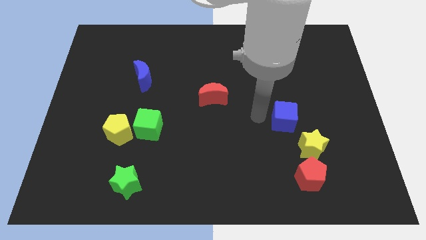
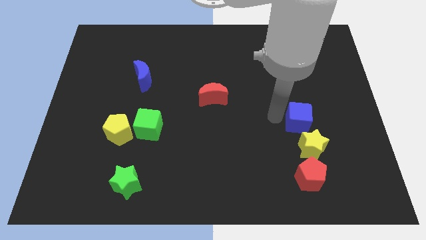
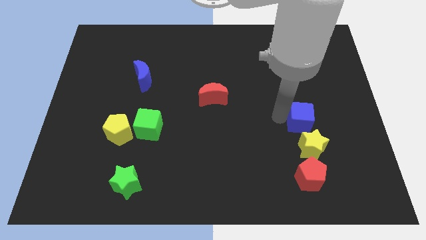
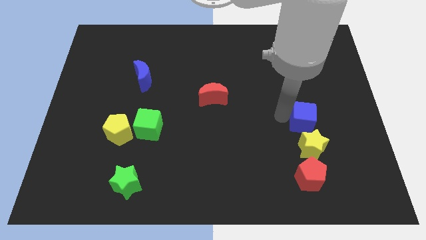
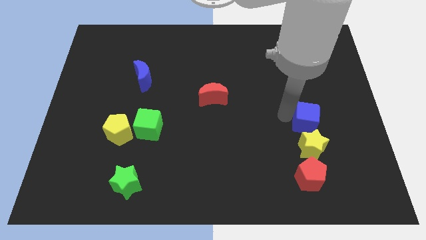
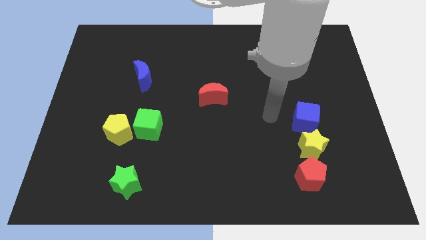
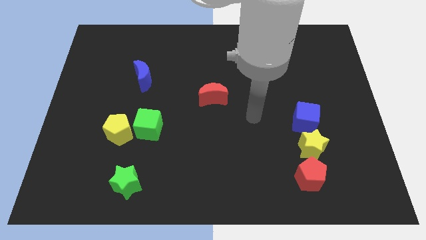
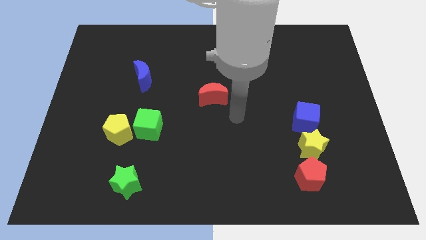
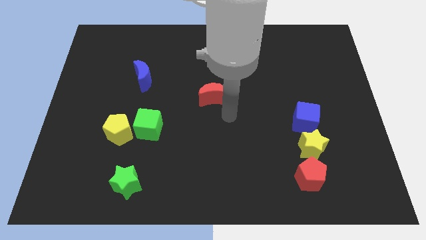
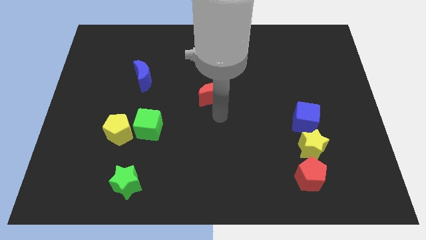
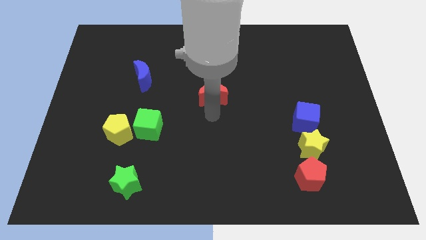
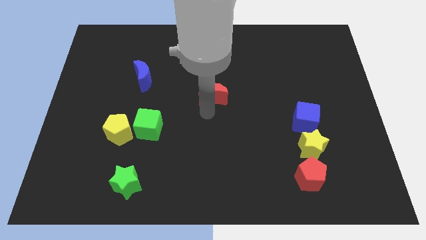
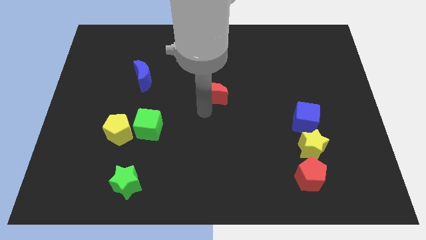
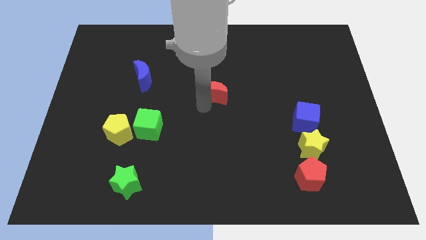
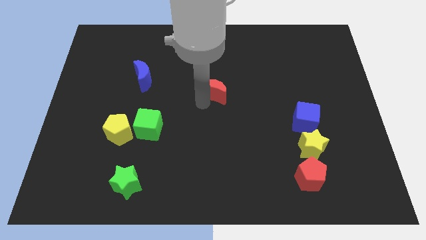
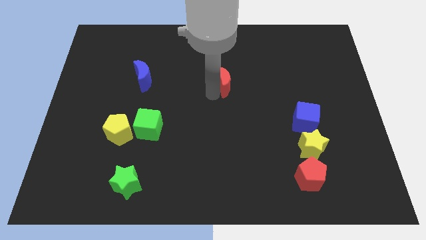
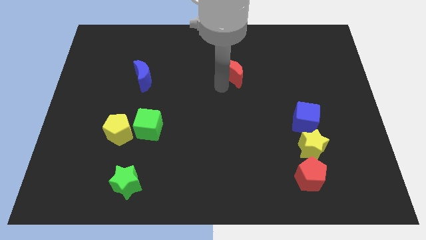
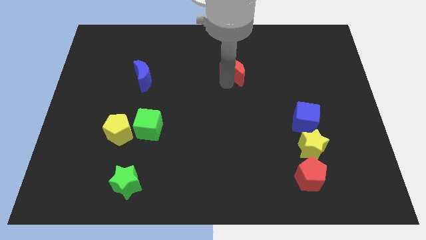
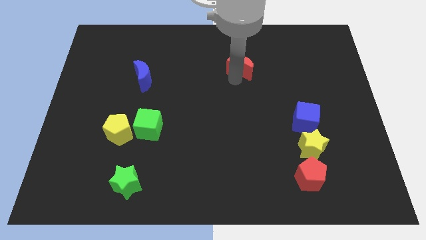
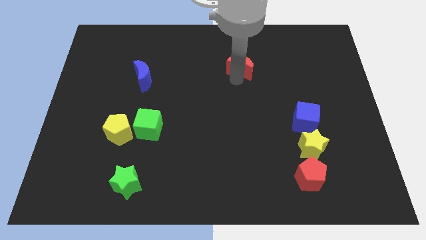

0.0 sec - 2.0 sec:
place the blue cube above the yellow stgar

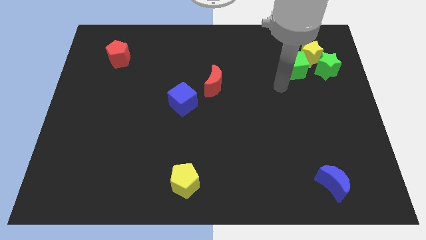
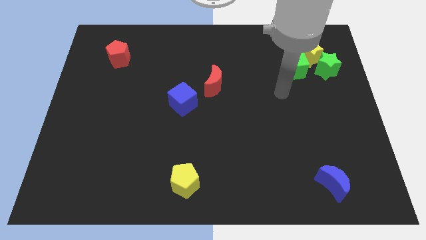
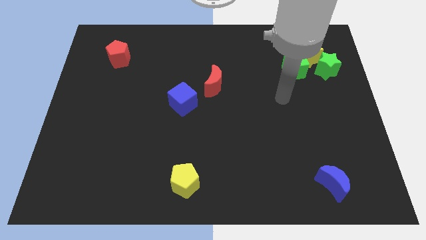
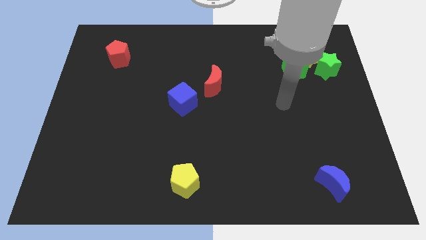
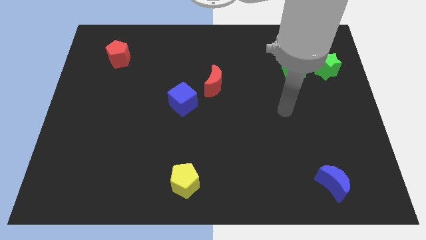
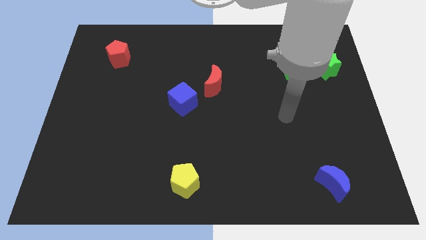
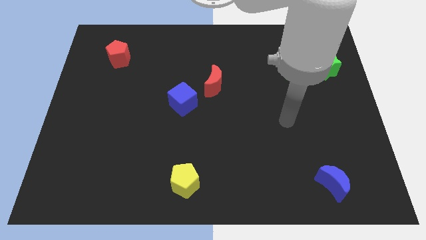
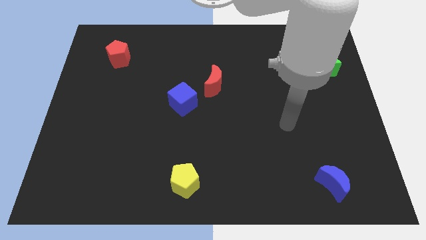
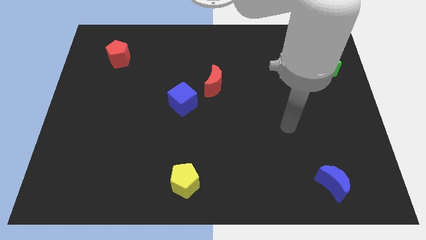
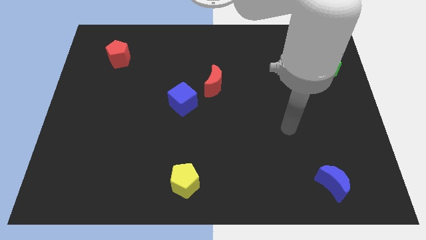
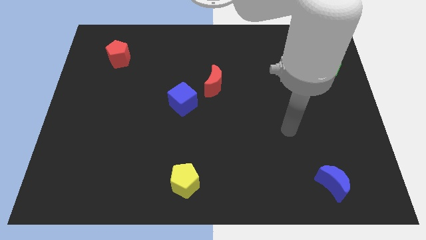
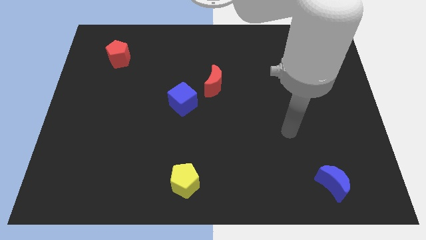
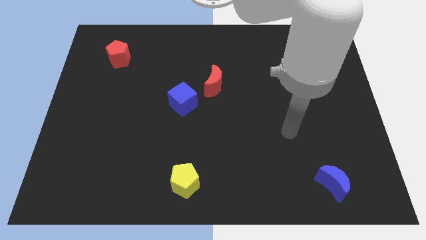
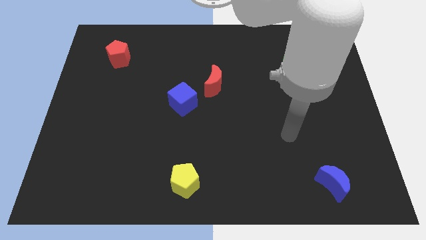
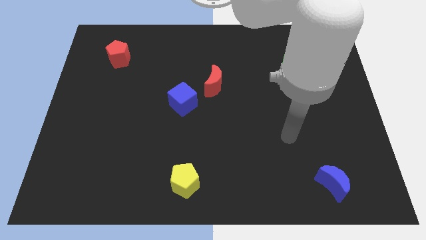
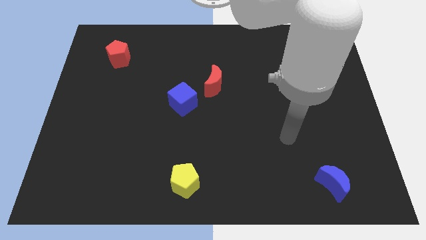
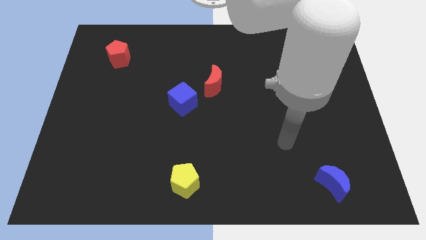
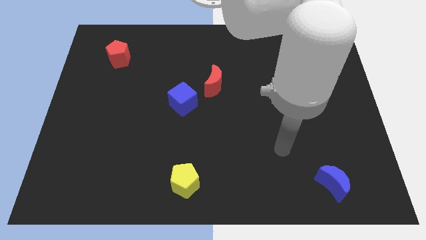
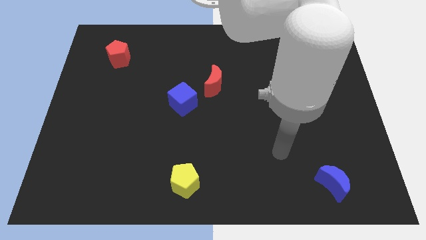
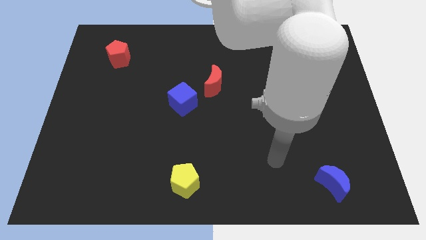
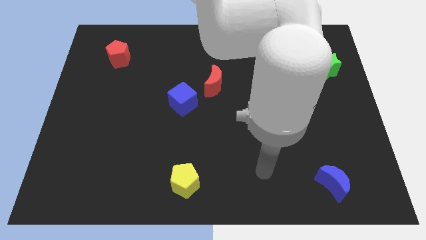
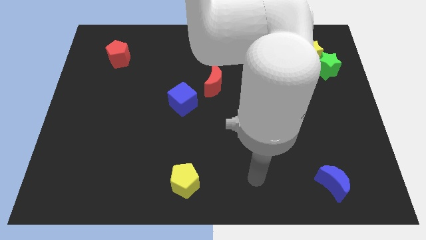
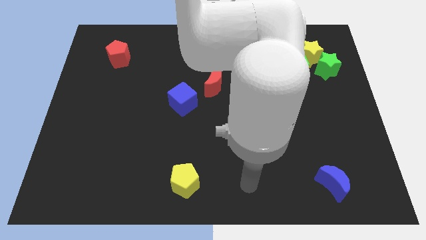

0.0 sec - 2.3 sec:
go and point your arm in between the yellow pentagon and the blue crescent

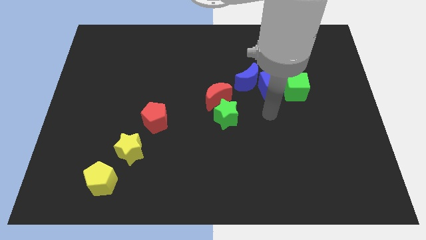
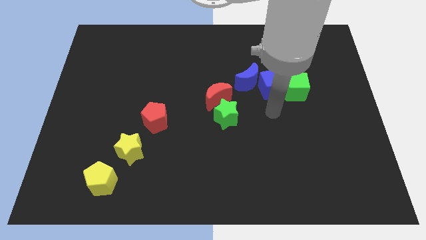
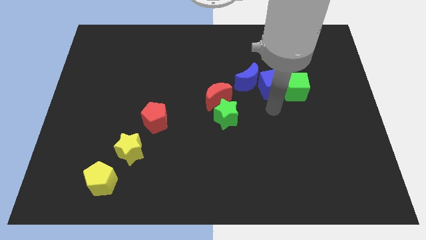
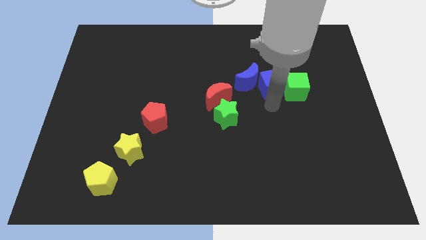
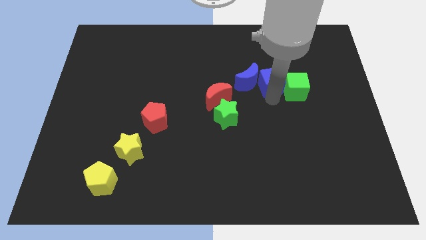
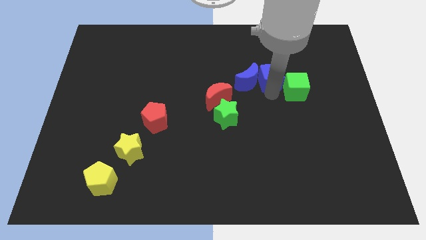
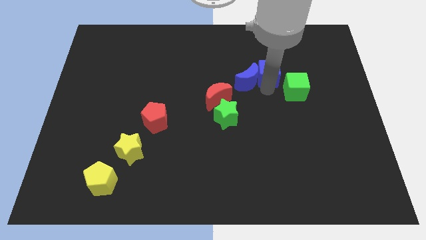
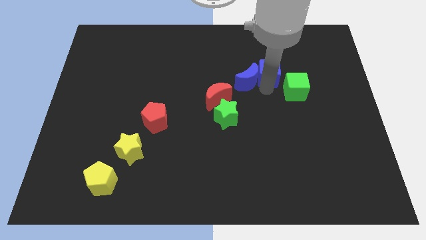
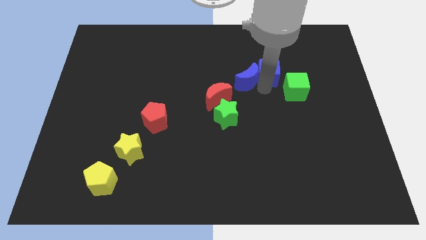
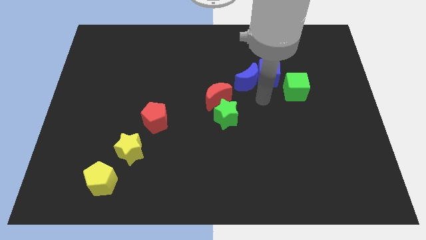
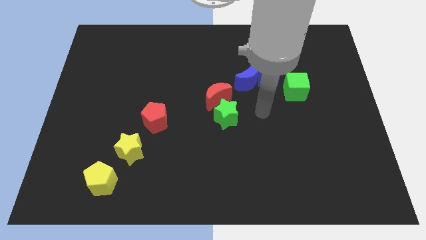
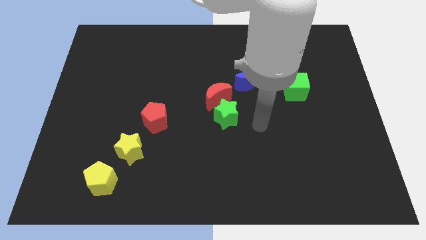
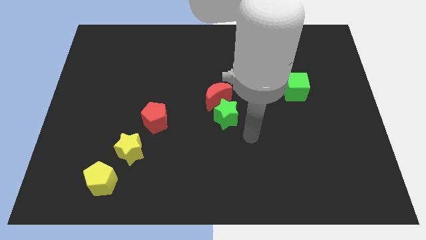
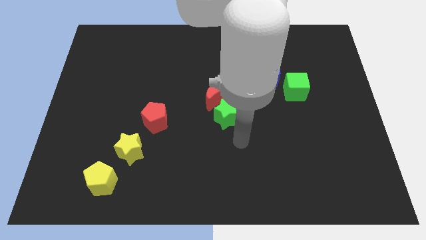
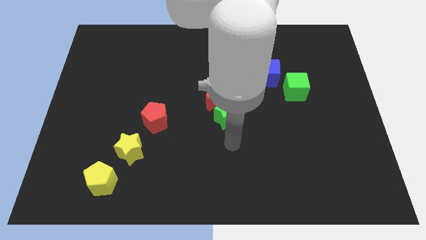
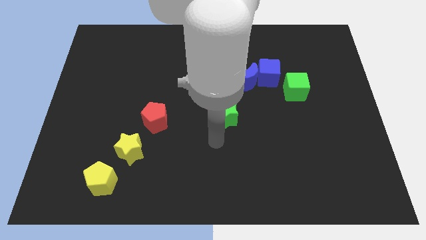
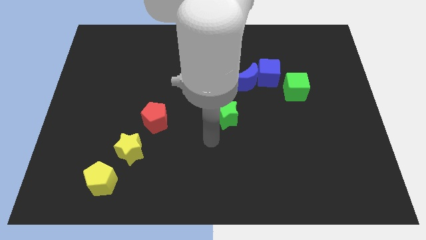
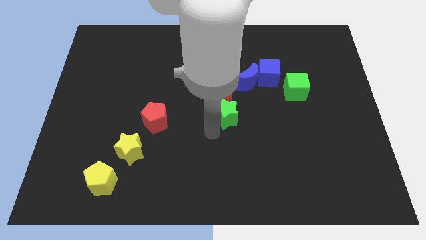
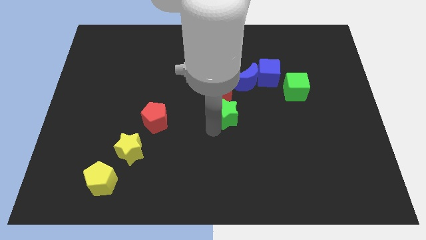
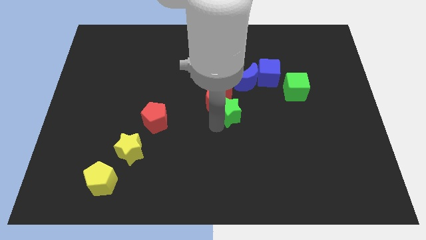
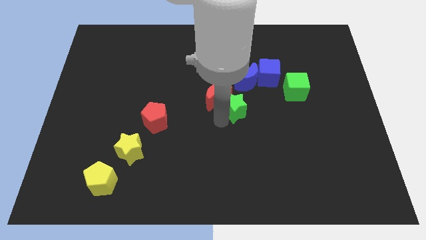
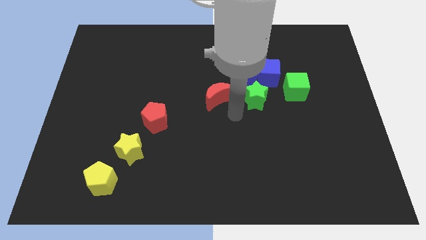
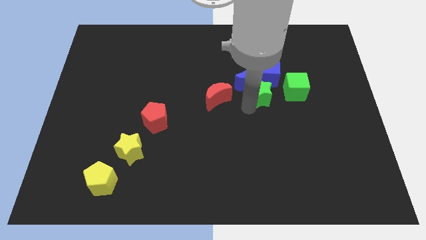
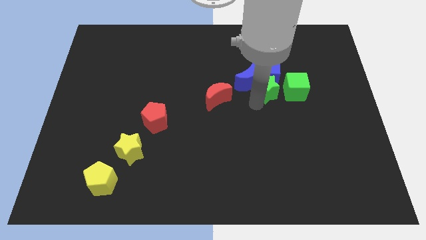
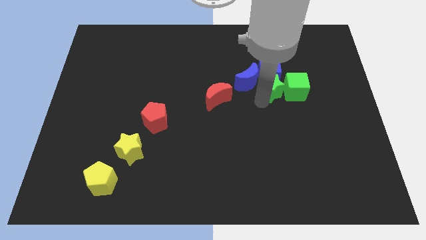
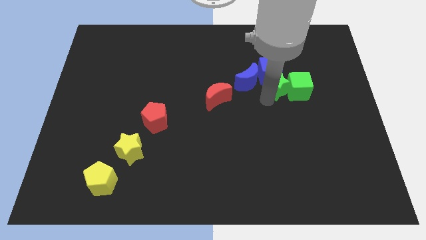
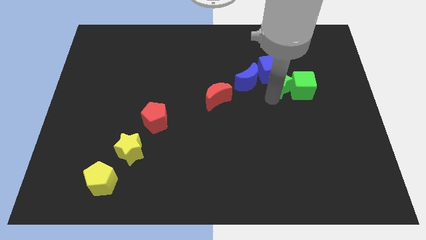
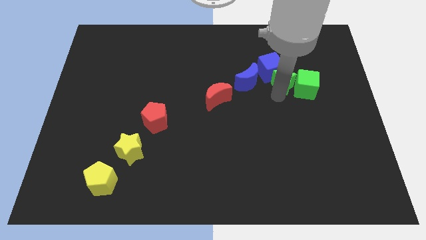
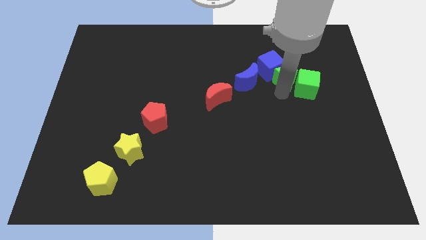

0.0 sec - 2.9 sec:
move the green star into a group of blocks

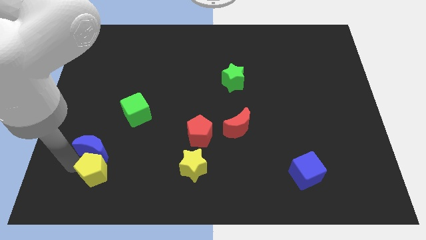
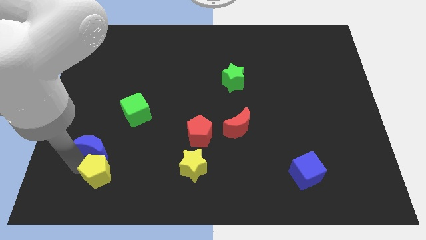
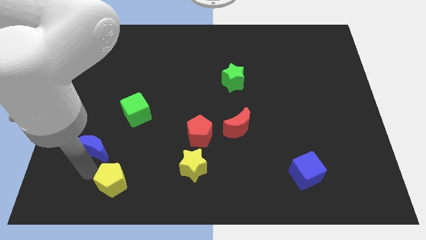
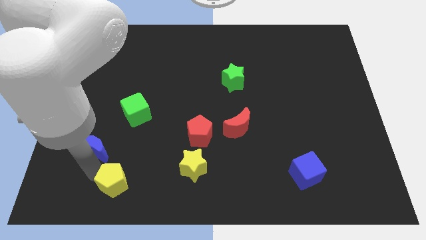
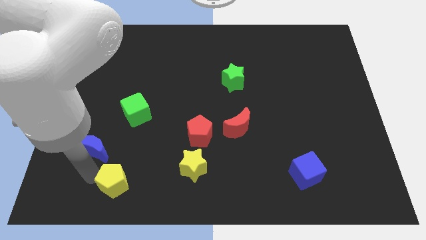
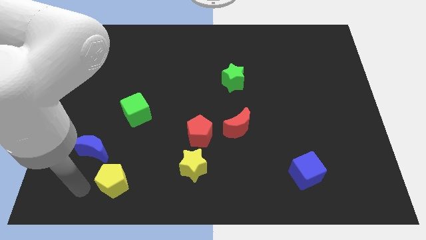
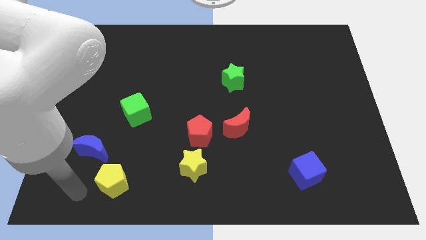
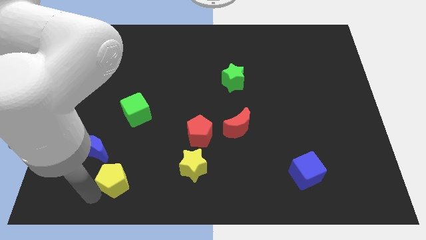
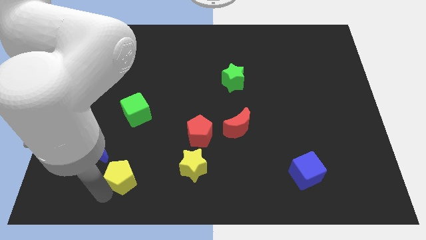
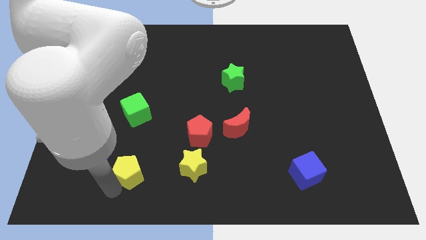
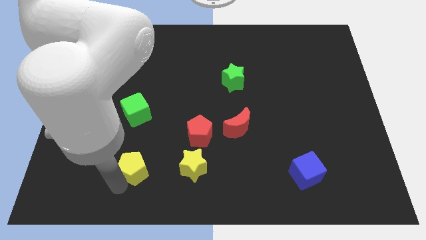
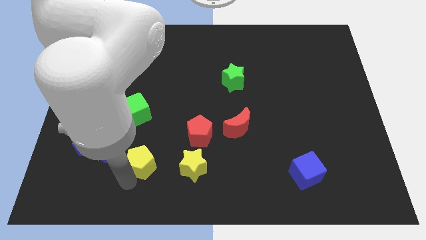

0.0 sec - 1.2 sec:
place the yellow pentagon vertically below the green cube

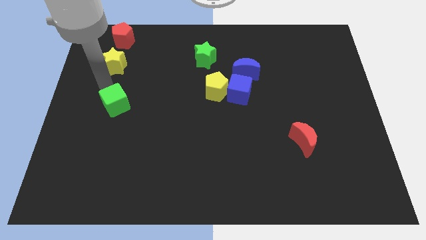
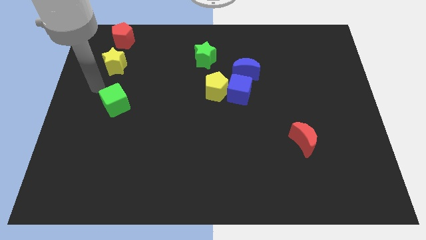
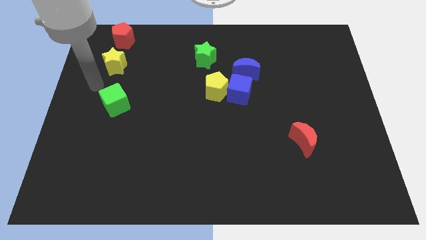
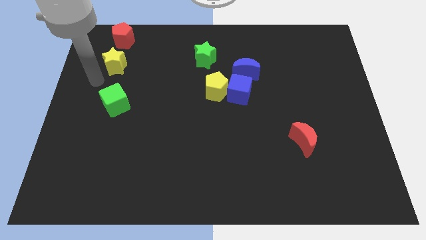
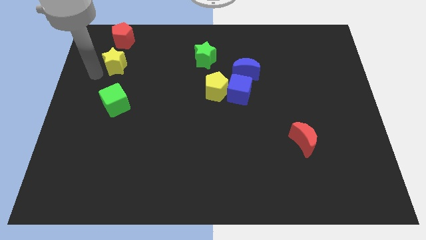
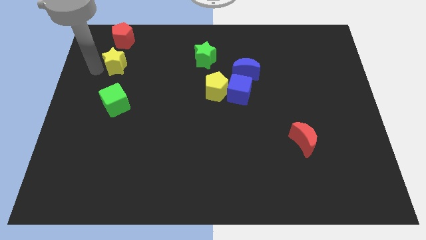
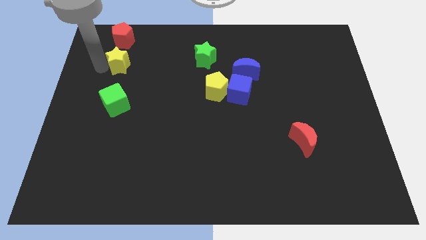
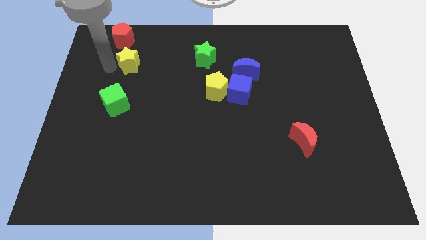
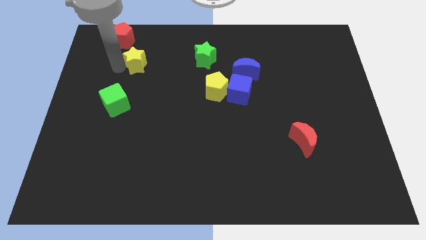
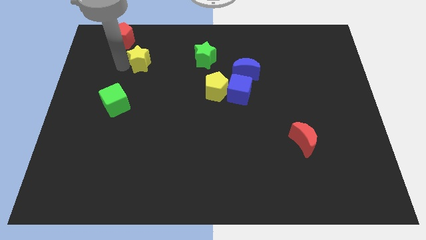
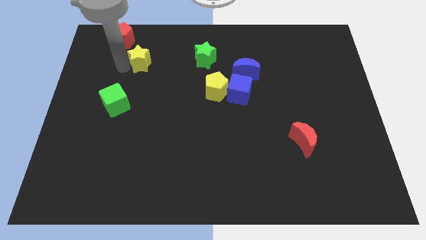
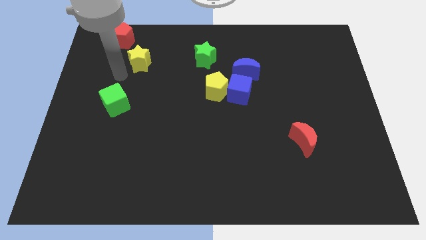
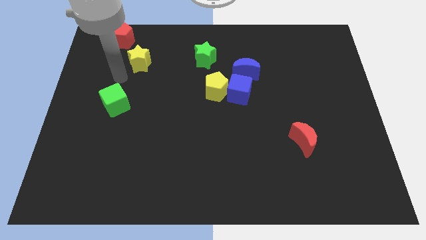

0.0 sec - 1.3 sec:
move the yellow star diagonally below the red pentagon
